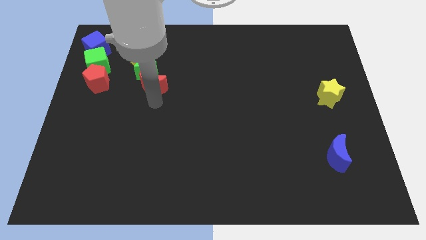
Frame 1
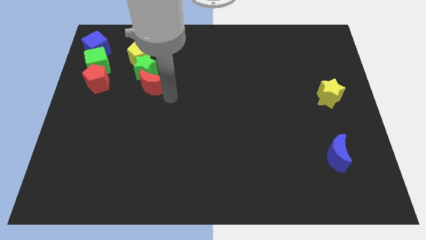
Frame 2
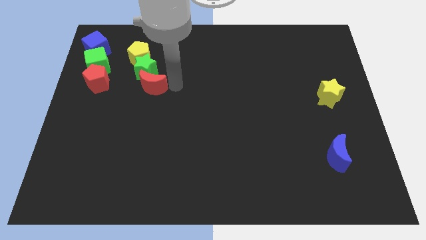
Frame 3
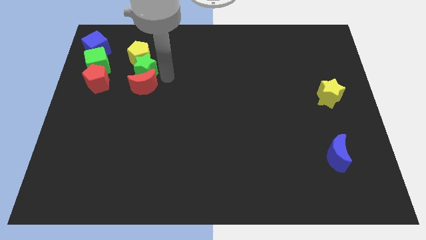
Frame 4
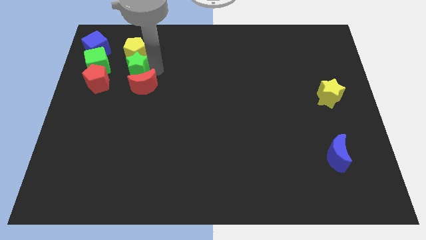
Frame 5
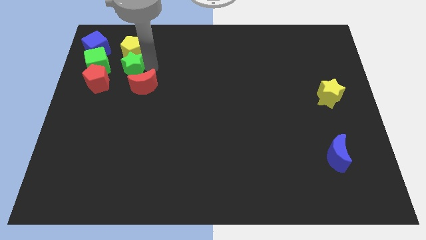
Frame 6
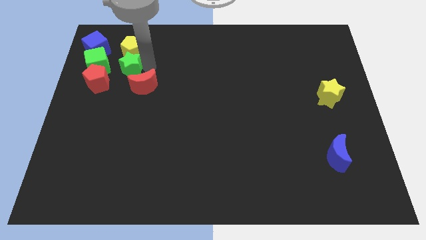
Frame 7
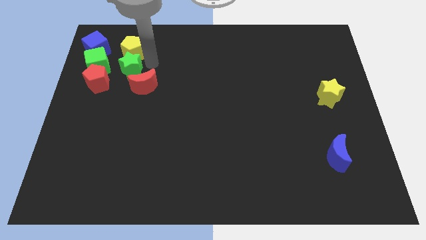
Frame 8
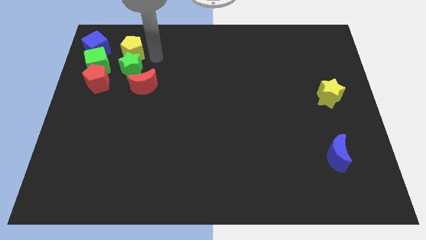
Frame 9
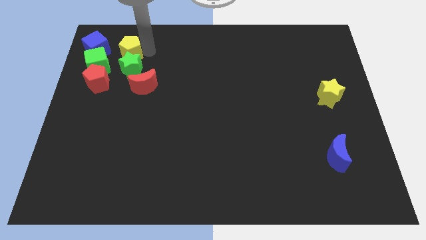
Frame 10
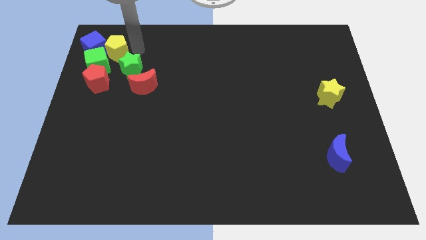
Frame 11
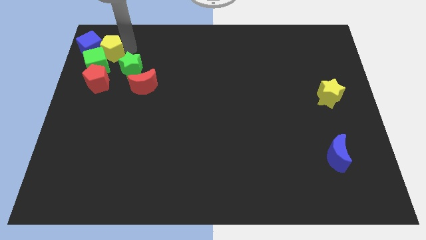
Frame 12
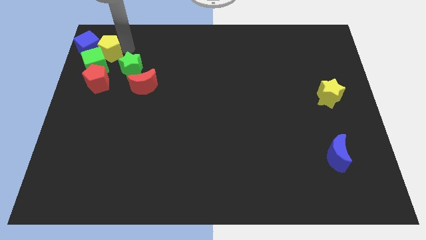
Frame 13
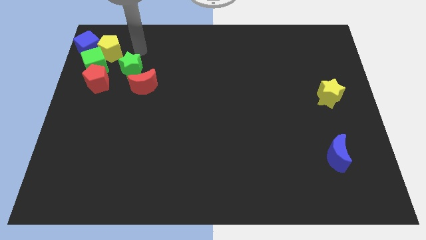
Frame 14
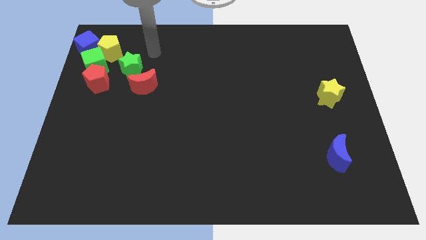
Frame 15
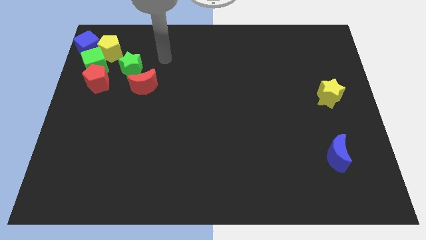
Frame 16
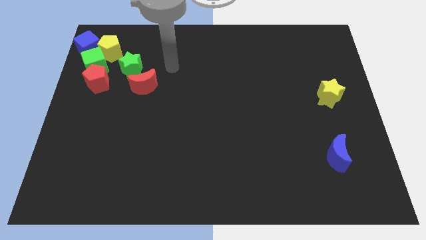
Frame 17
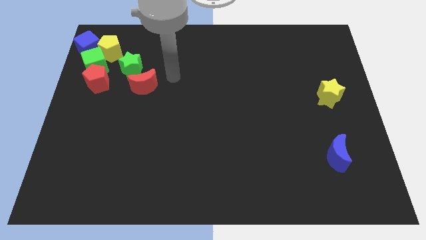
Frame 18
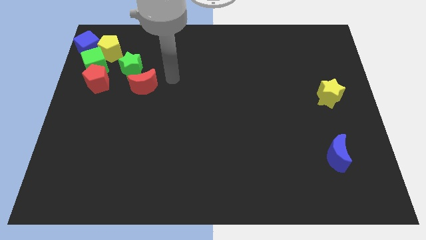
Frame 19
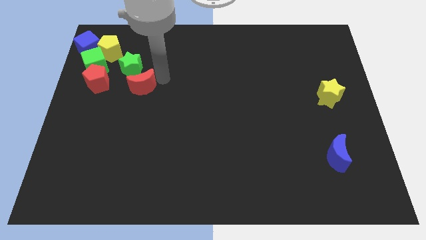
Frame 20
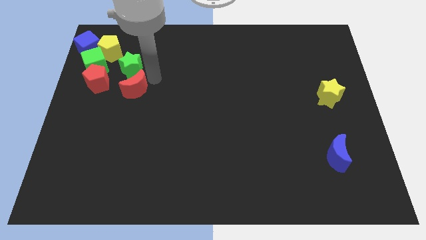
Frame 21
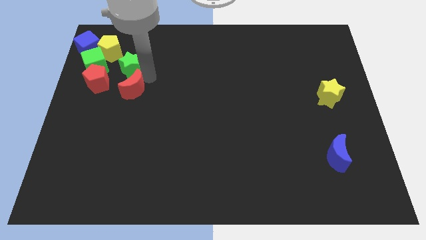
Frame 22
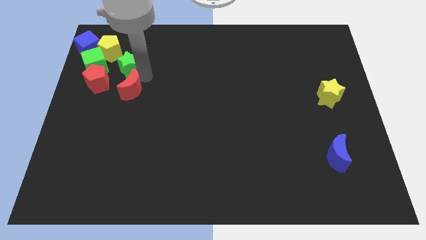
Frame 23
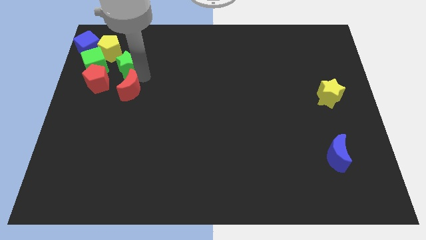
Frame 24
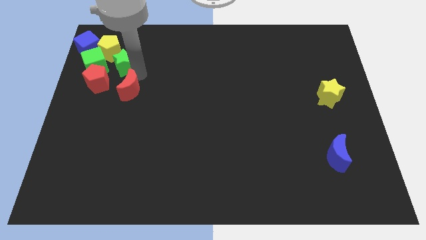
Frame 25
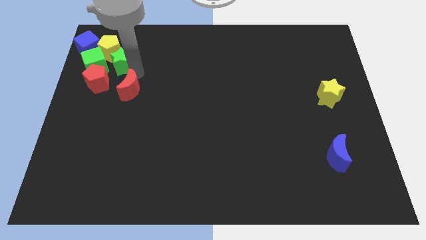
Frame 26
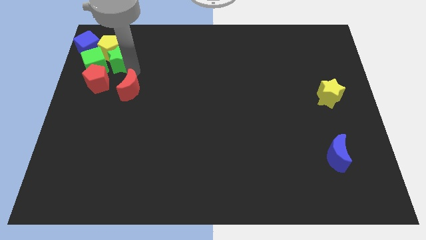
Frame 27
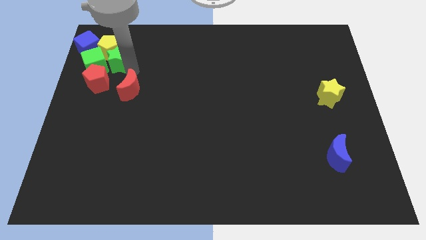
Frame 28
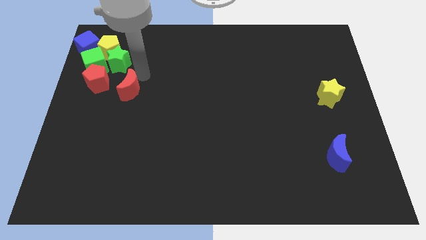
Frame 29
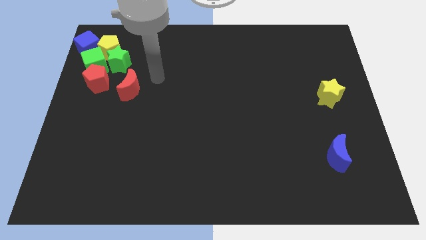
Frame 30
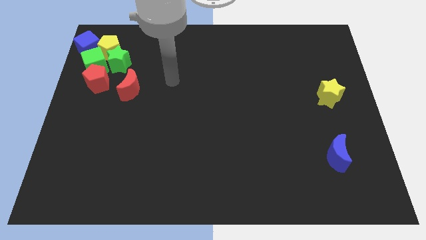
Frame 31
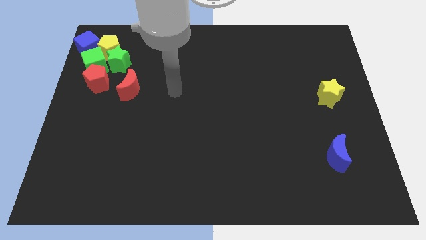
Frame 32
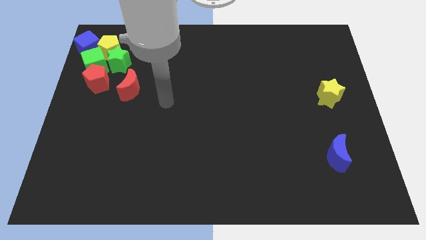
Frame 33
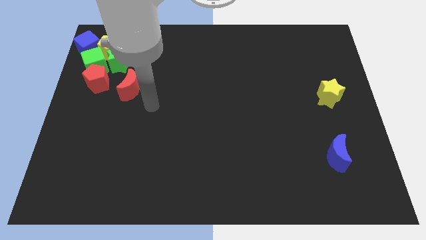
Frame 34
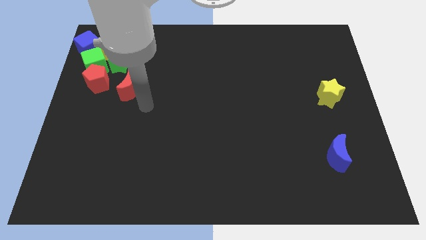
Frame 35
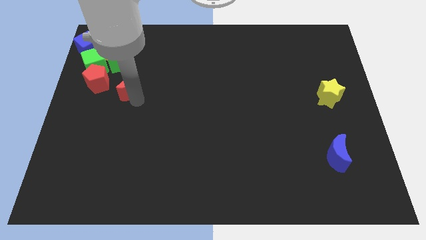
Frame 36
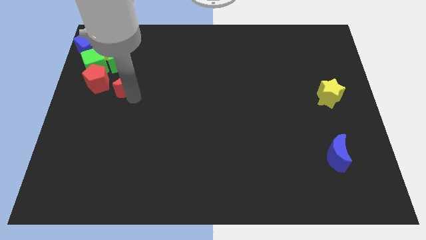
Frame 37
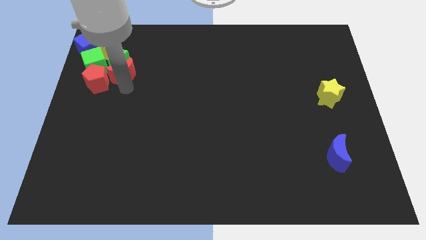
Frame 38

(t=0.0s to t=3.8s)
move the red crescent green star and yellow pentagon into the diagonal line of blocks

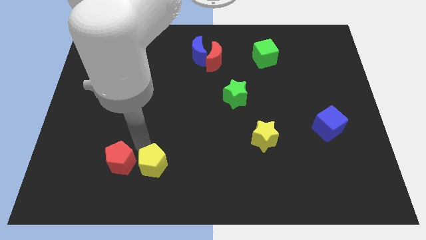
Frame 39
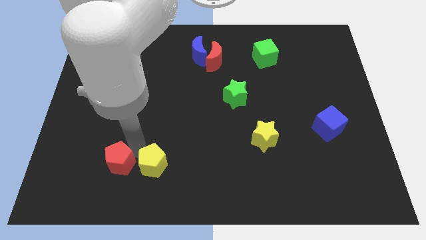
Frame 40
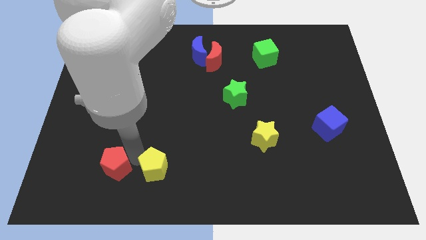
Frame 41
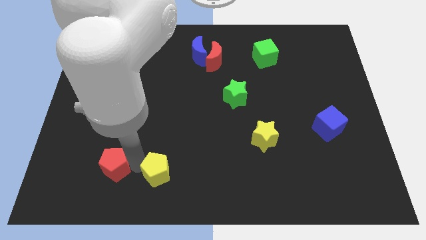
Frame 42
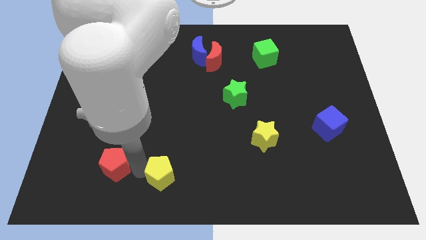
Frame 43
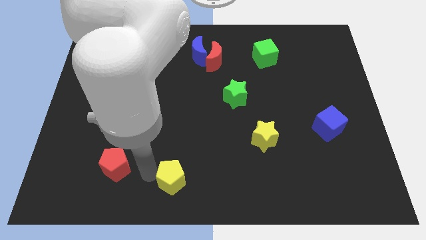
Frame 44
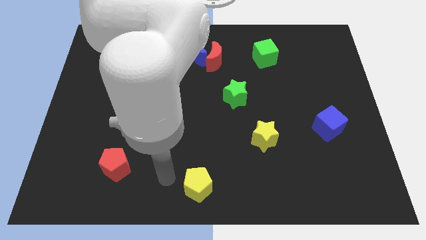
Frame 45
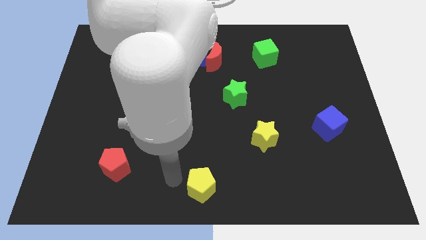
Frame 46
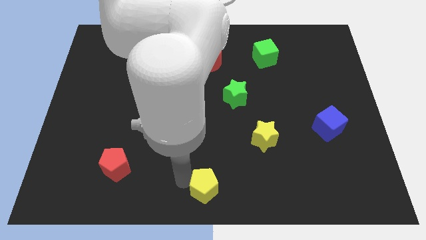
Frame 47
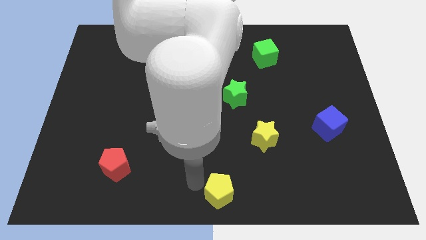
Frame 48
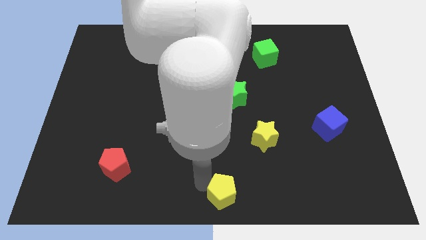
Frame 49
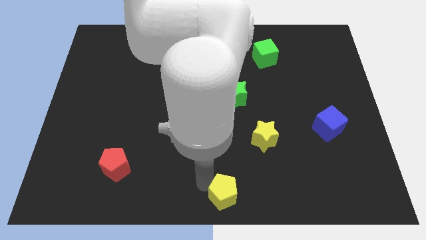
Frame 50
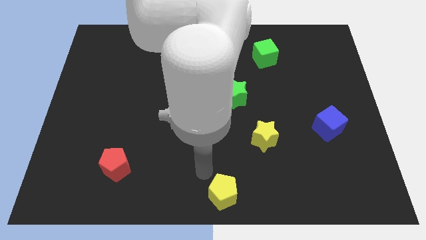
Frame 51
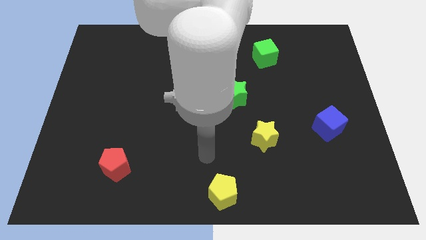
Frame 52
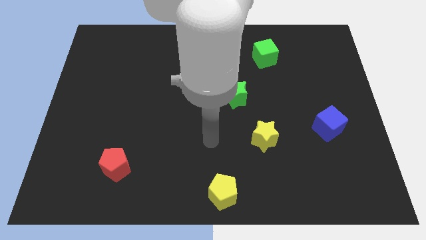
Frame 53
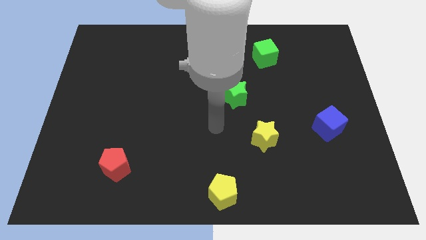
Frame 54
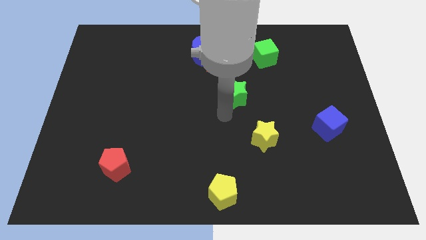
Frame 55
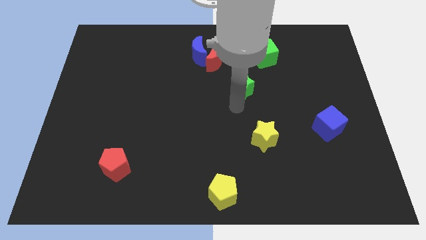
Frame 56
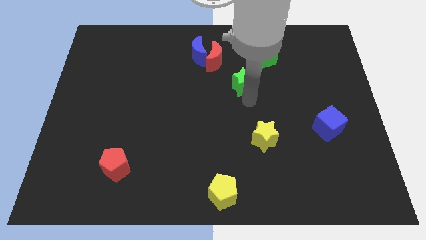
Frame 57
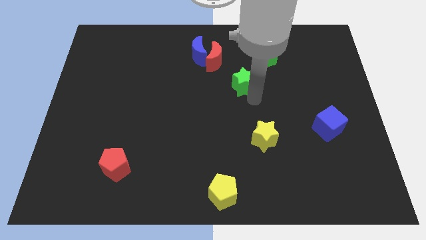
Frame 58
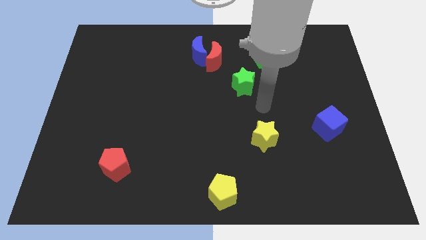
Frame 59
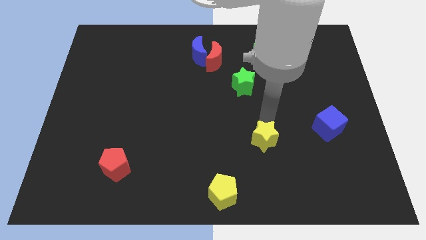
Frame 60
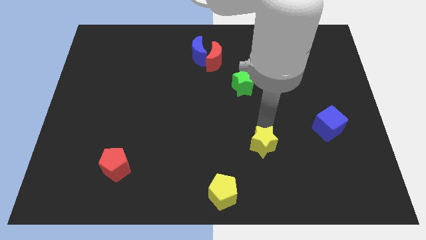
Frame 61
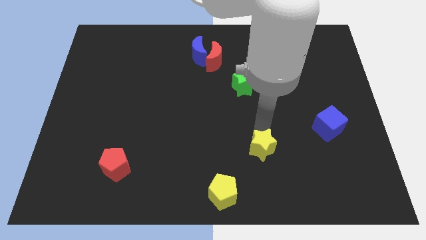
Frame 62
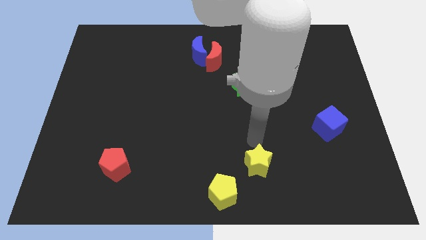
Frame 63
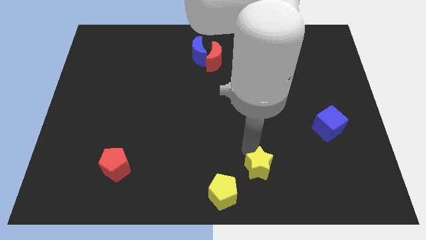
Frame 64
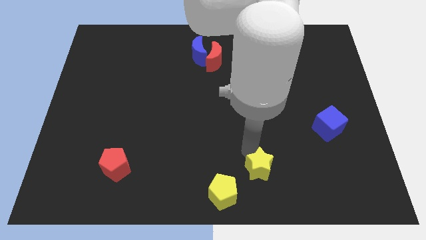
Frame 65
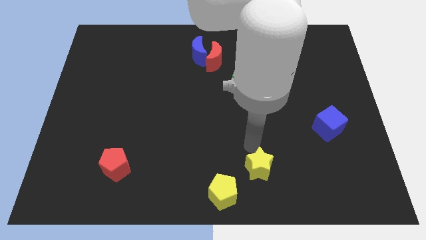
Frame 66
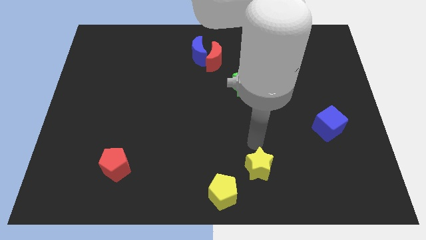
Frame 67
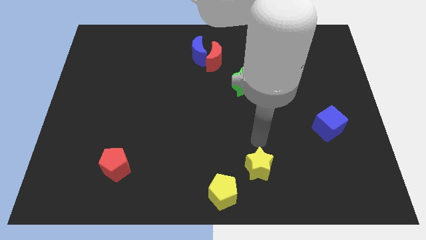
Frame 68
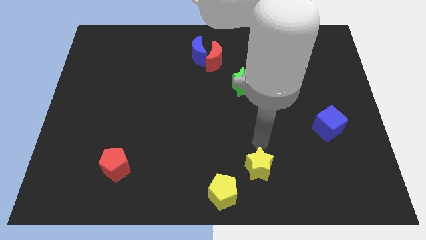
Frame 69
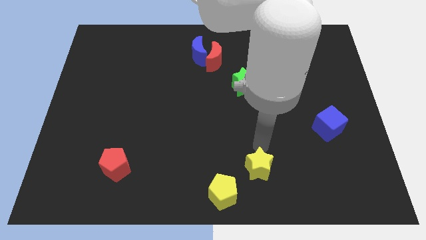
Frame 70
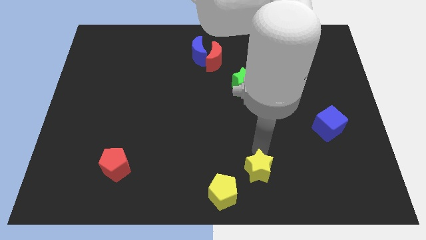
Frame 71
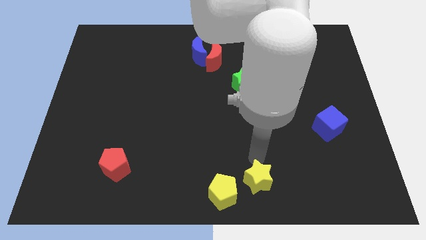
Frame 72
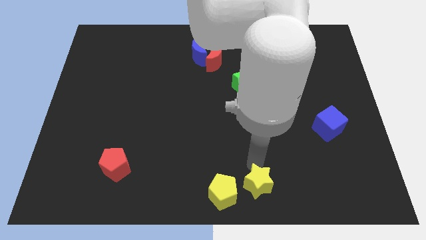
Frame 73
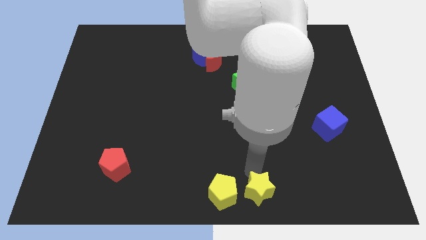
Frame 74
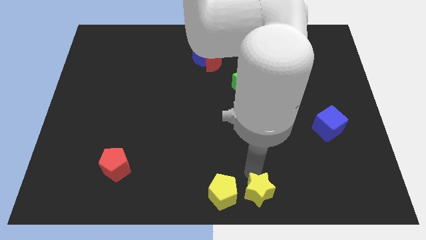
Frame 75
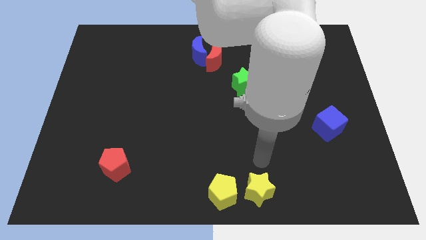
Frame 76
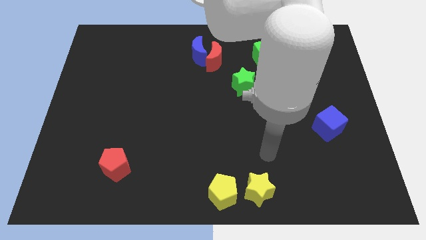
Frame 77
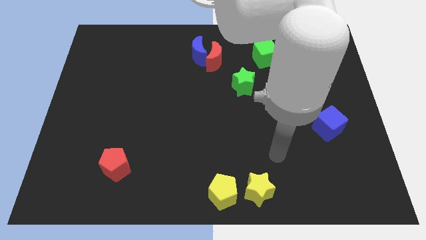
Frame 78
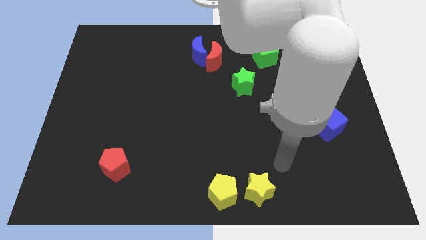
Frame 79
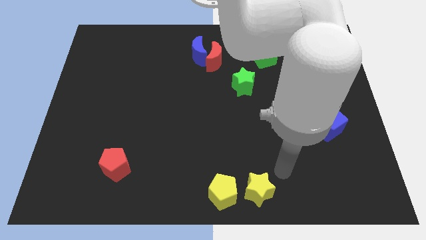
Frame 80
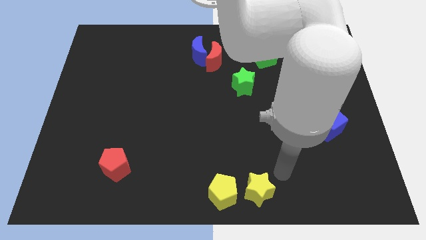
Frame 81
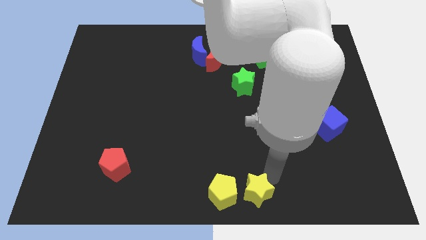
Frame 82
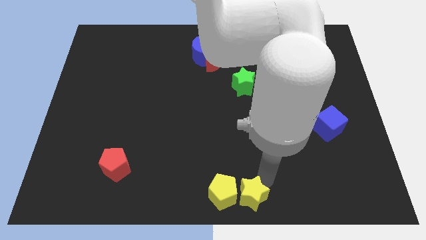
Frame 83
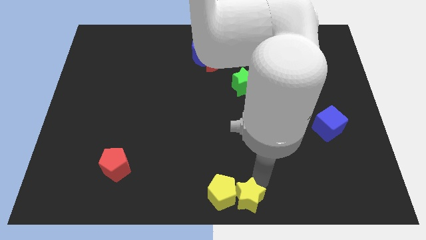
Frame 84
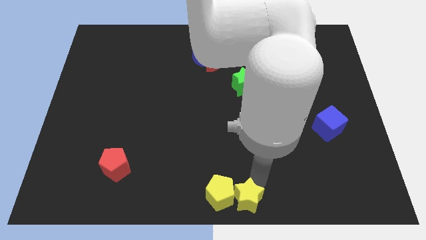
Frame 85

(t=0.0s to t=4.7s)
place the yellow pentagon and yellow star below the green star

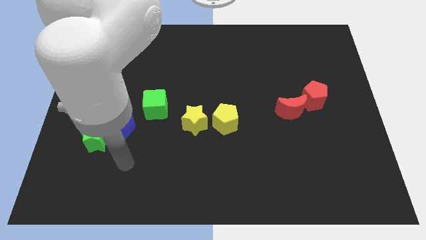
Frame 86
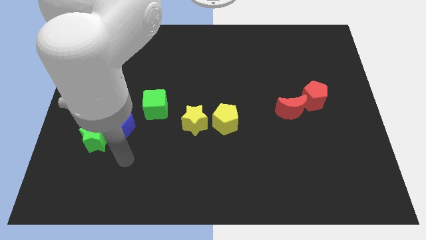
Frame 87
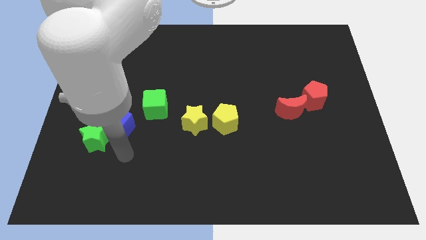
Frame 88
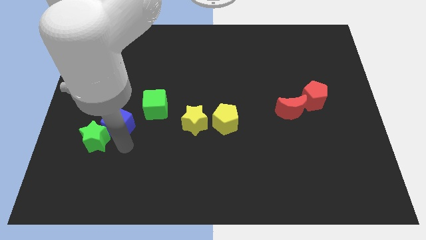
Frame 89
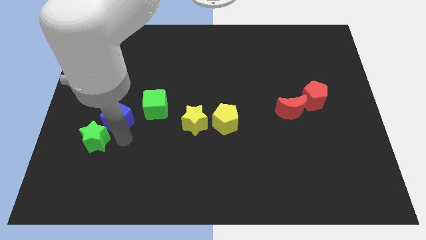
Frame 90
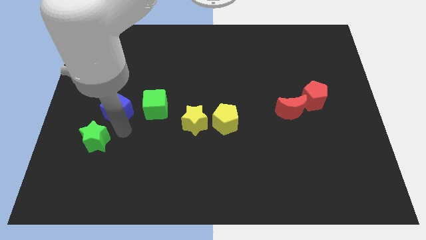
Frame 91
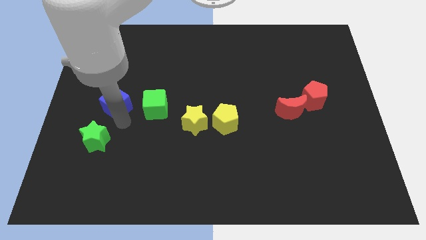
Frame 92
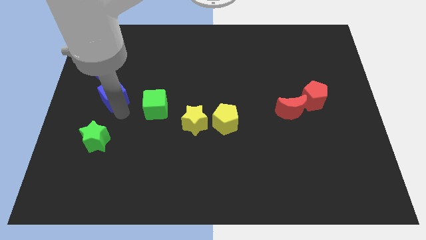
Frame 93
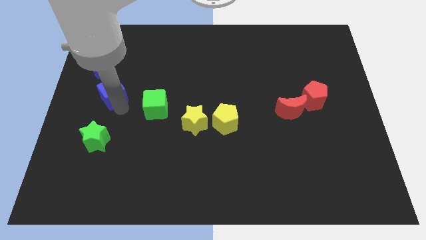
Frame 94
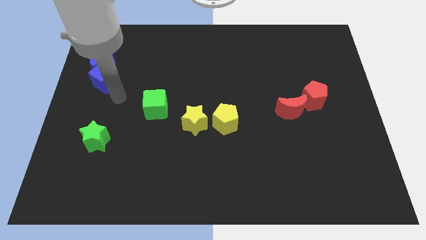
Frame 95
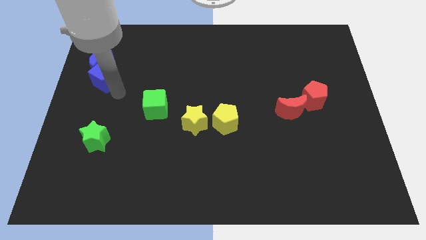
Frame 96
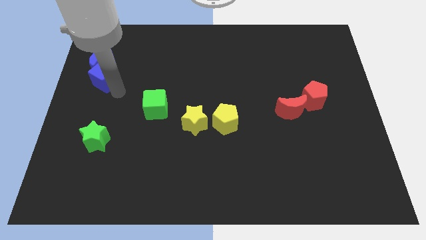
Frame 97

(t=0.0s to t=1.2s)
push blue cube towards blue crescent
